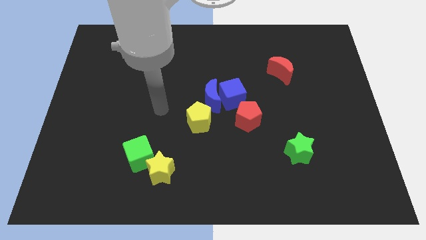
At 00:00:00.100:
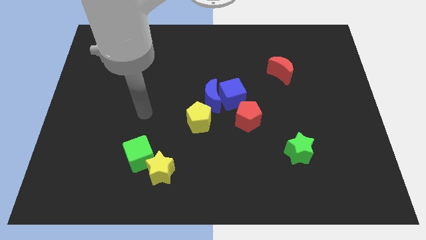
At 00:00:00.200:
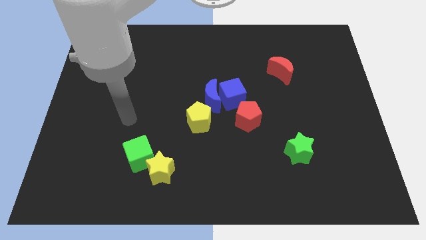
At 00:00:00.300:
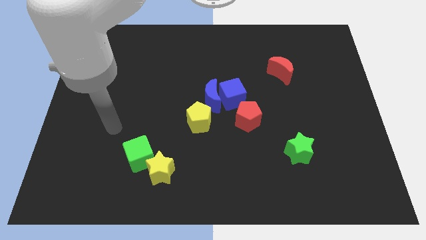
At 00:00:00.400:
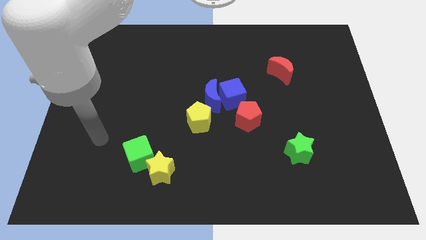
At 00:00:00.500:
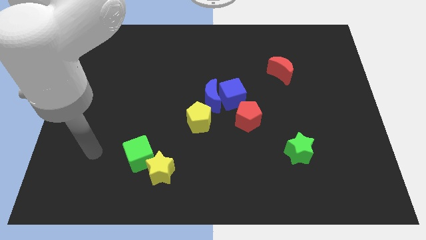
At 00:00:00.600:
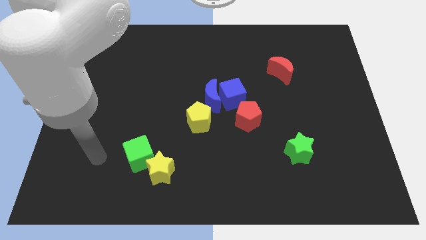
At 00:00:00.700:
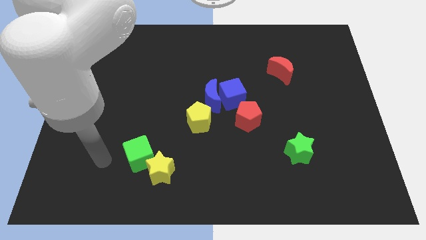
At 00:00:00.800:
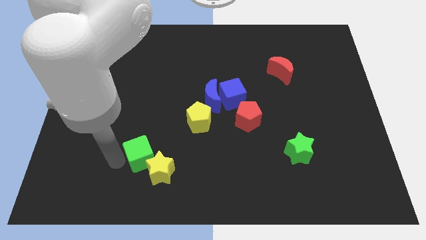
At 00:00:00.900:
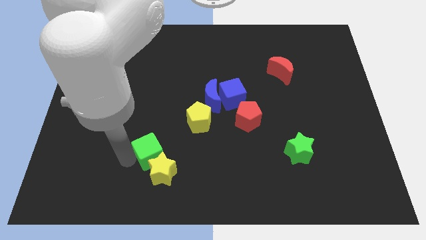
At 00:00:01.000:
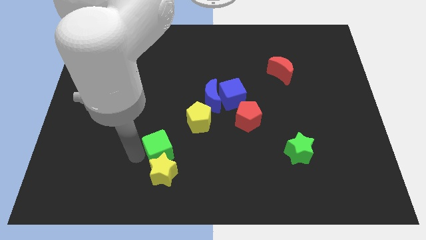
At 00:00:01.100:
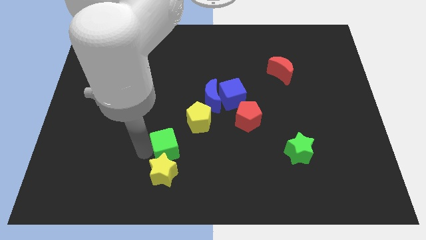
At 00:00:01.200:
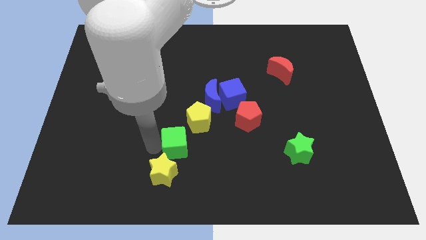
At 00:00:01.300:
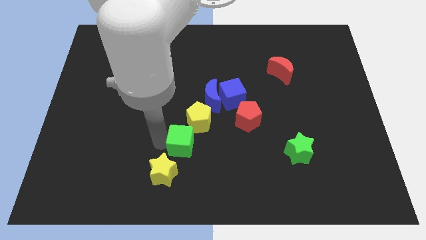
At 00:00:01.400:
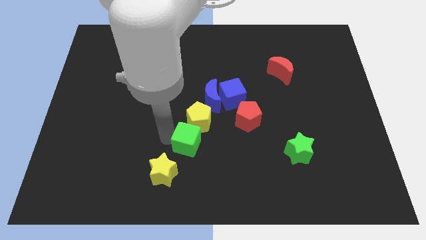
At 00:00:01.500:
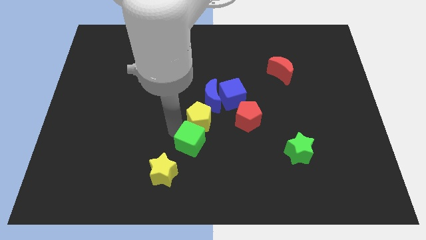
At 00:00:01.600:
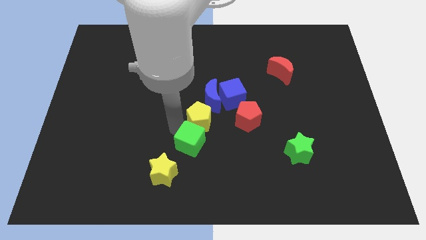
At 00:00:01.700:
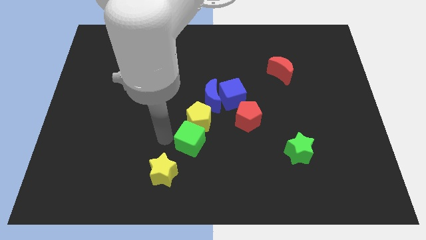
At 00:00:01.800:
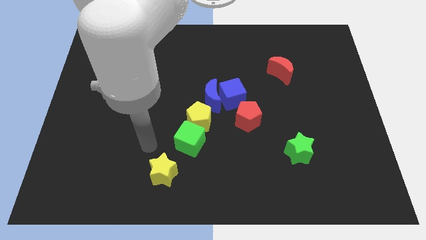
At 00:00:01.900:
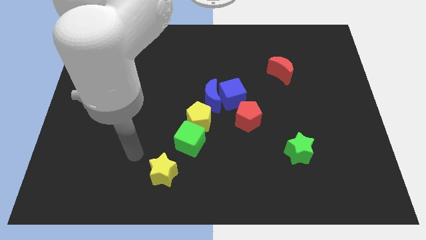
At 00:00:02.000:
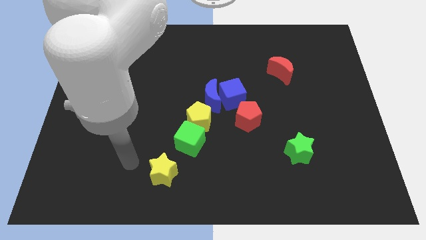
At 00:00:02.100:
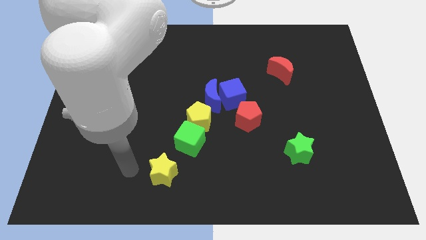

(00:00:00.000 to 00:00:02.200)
separate the green cube and yellow star

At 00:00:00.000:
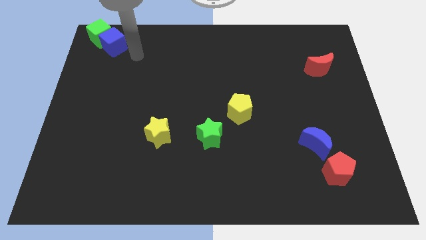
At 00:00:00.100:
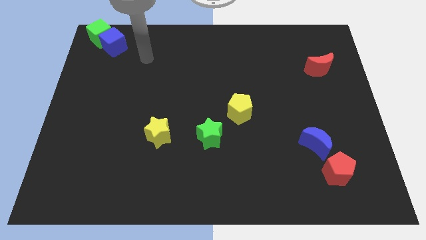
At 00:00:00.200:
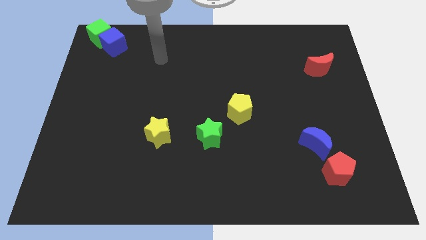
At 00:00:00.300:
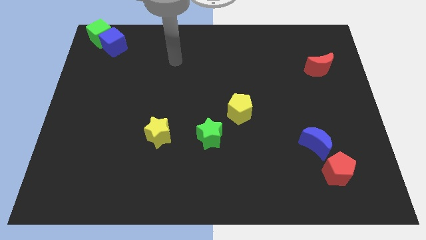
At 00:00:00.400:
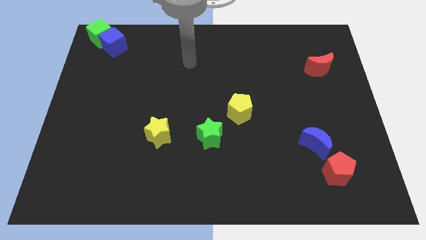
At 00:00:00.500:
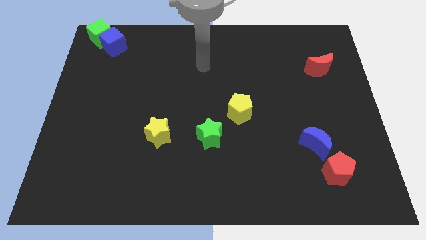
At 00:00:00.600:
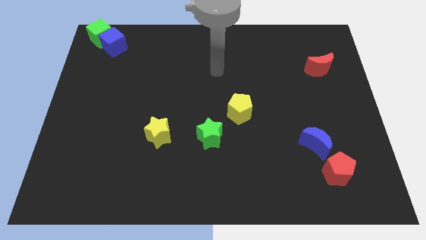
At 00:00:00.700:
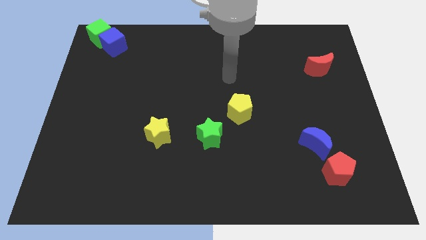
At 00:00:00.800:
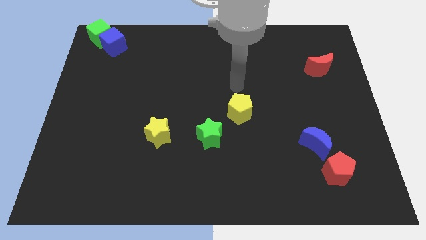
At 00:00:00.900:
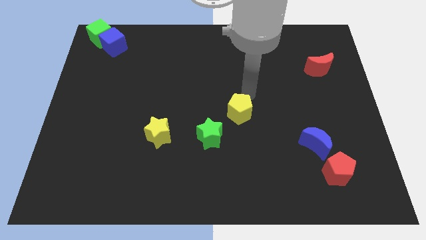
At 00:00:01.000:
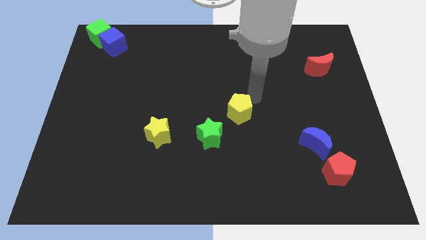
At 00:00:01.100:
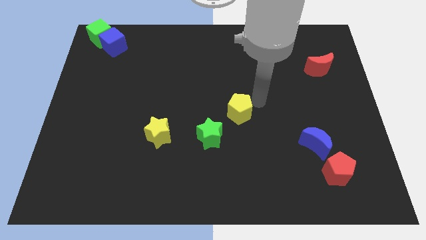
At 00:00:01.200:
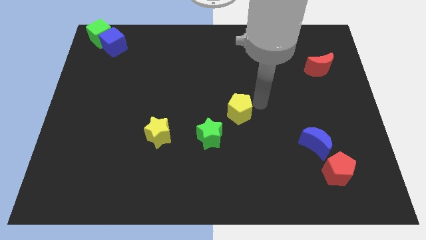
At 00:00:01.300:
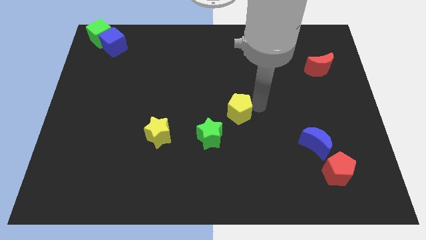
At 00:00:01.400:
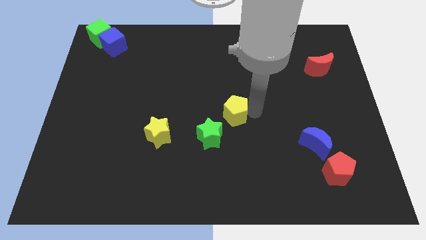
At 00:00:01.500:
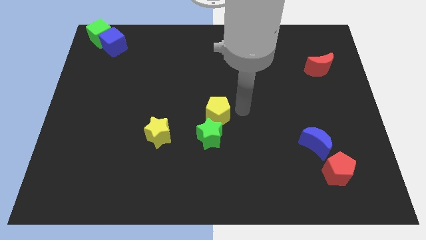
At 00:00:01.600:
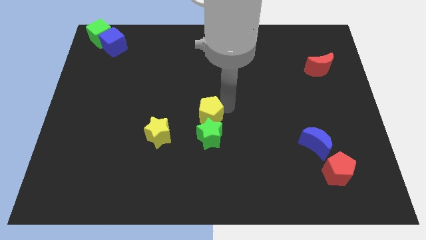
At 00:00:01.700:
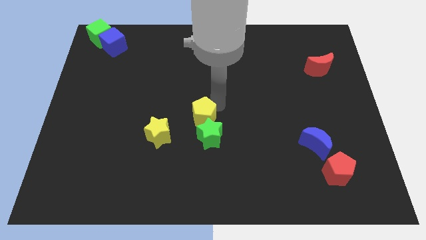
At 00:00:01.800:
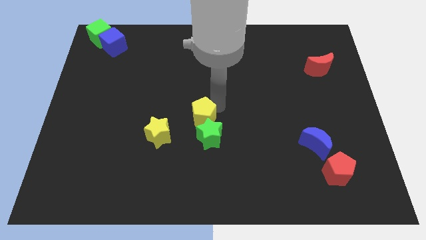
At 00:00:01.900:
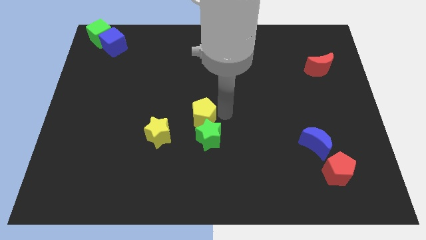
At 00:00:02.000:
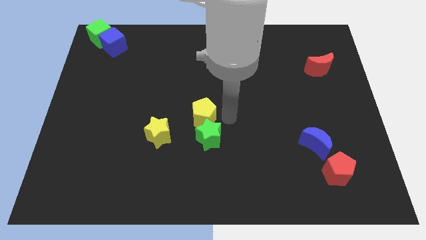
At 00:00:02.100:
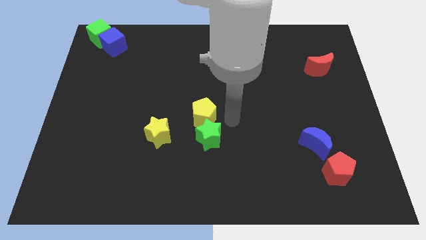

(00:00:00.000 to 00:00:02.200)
push the yellow pentagon above green star

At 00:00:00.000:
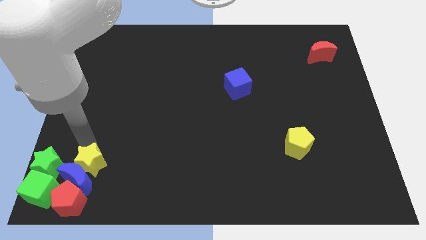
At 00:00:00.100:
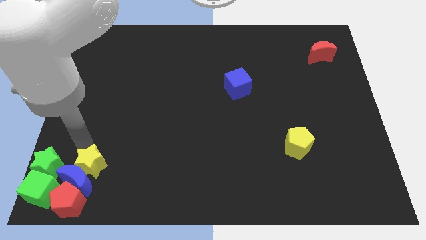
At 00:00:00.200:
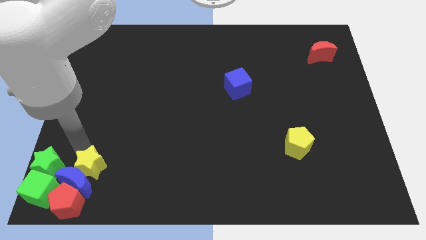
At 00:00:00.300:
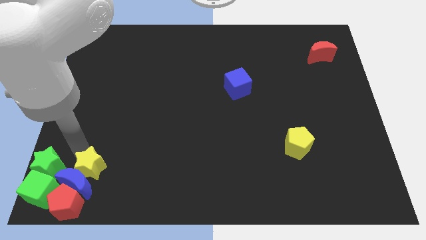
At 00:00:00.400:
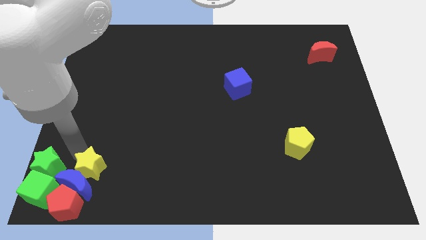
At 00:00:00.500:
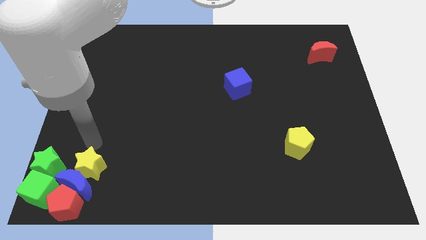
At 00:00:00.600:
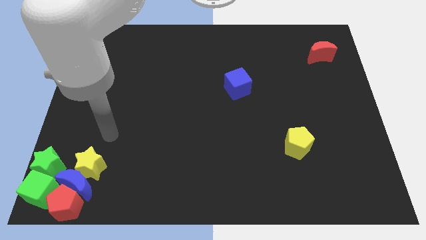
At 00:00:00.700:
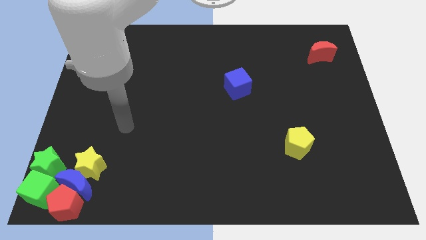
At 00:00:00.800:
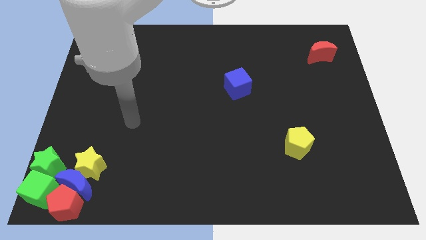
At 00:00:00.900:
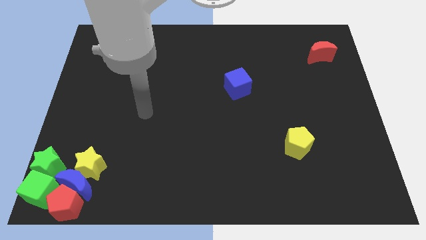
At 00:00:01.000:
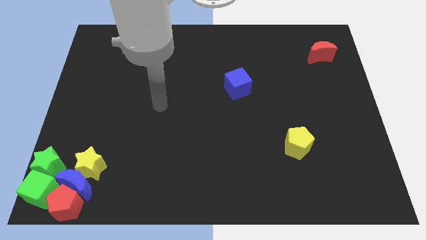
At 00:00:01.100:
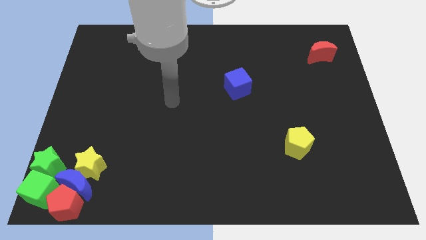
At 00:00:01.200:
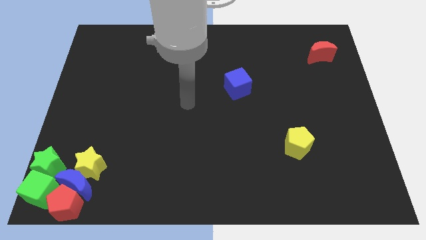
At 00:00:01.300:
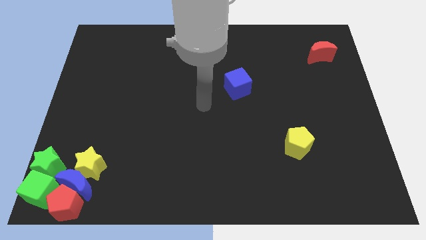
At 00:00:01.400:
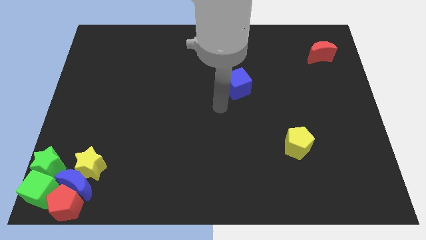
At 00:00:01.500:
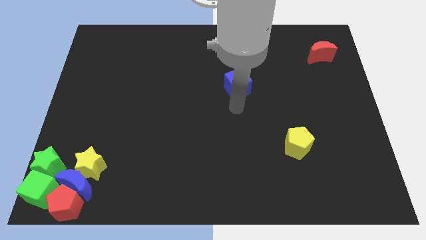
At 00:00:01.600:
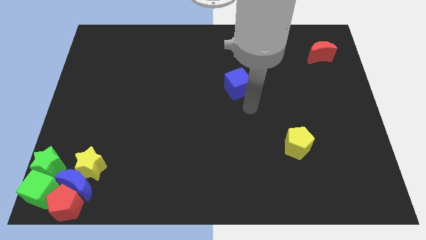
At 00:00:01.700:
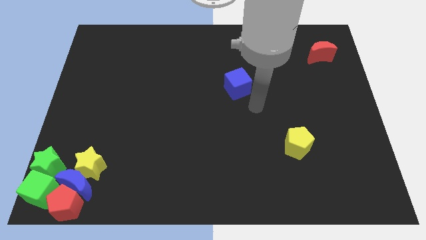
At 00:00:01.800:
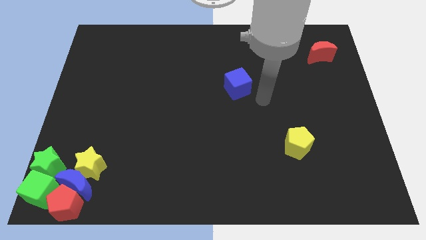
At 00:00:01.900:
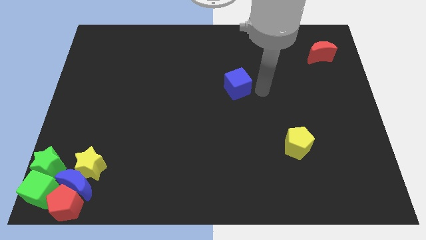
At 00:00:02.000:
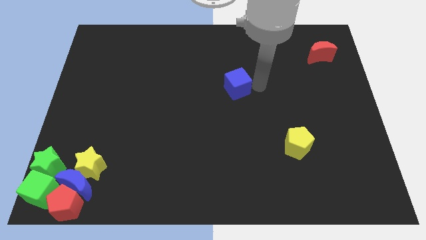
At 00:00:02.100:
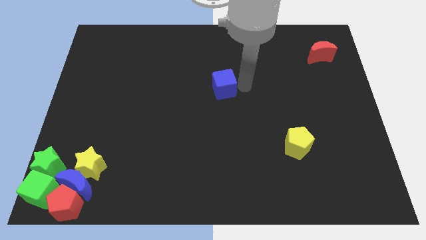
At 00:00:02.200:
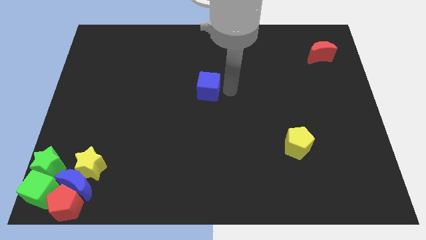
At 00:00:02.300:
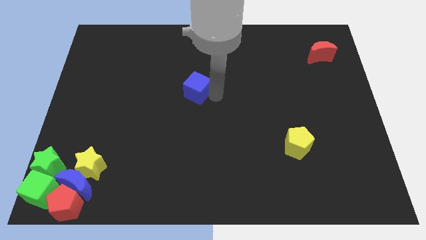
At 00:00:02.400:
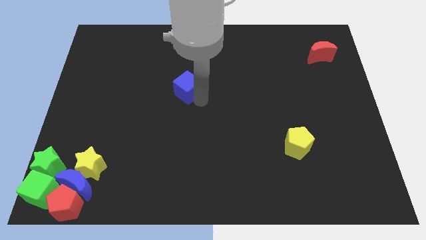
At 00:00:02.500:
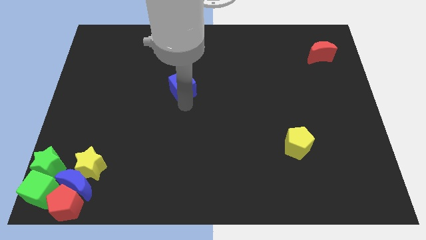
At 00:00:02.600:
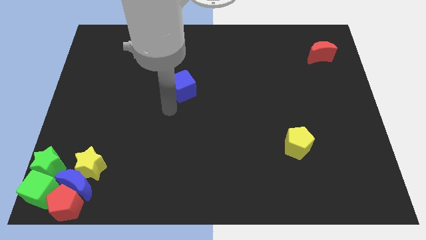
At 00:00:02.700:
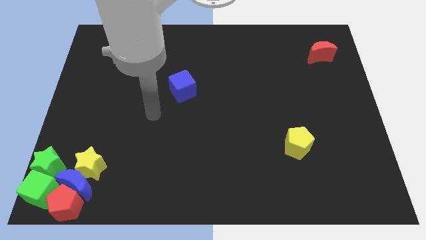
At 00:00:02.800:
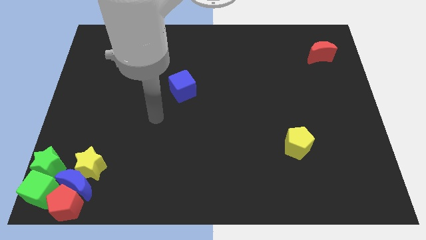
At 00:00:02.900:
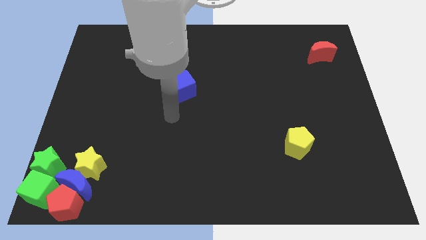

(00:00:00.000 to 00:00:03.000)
push the blue cube towards the left side

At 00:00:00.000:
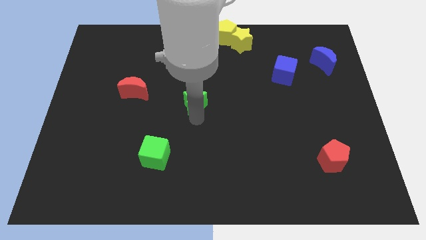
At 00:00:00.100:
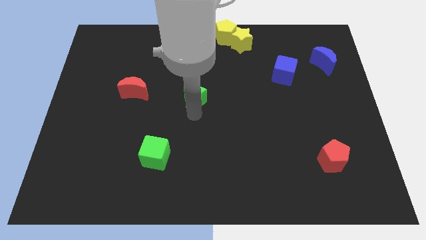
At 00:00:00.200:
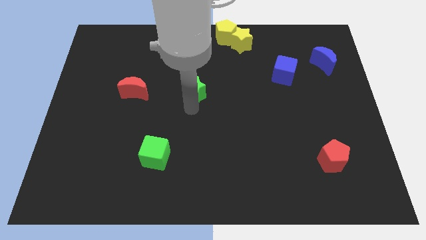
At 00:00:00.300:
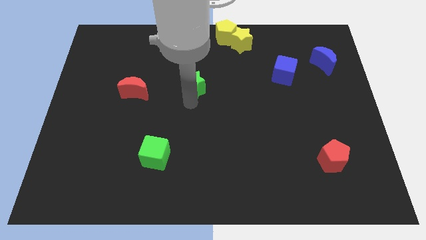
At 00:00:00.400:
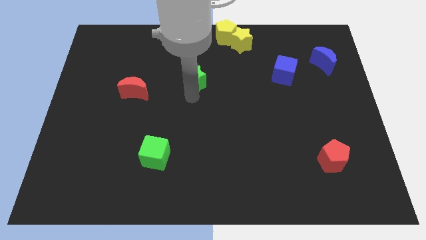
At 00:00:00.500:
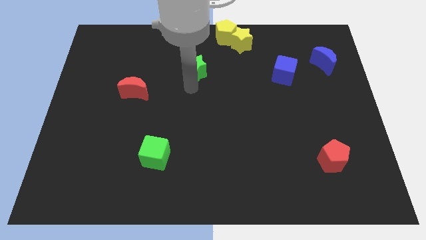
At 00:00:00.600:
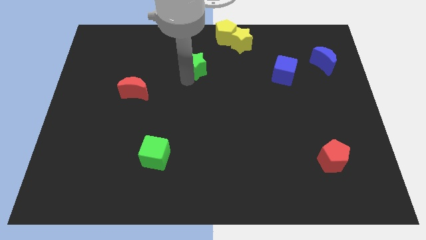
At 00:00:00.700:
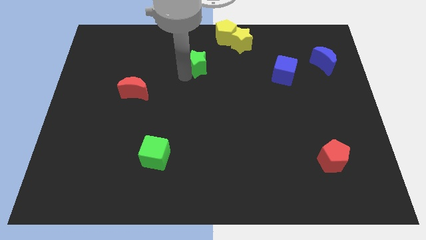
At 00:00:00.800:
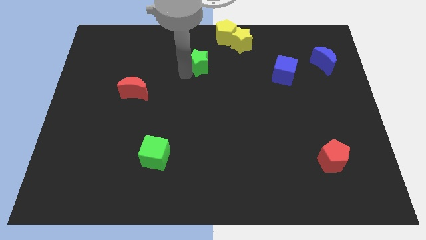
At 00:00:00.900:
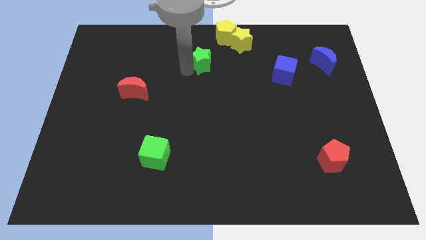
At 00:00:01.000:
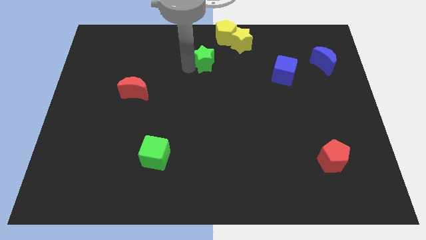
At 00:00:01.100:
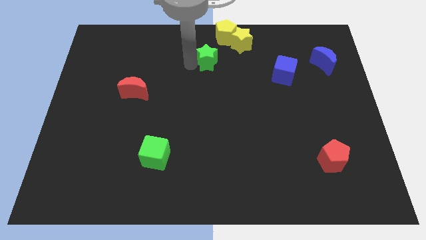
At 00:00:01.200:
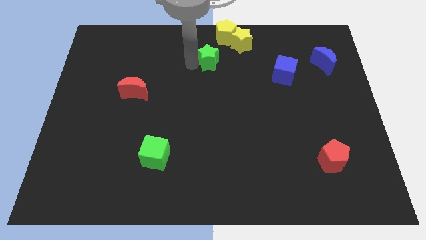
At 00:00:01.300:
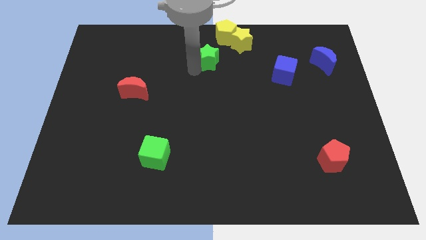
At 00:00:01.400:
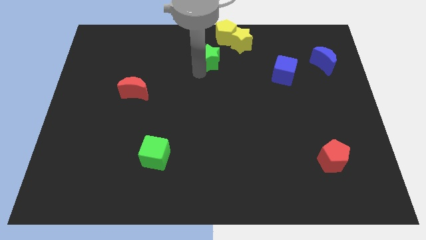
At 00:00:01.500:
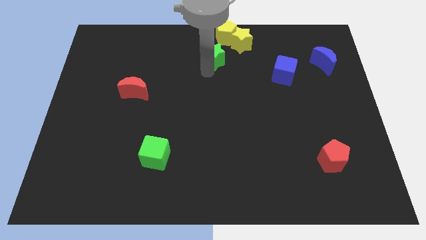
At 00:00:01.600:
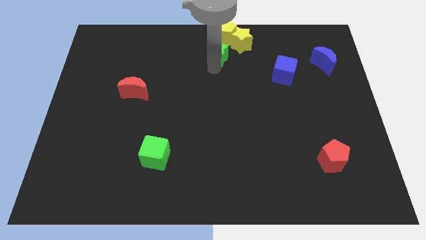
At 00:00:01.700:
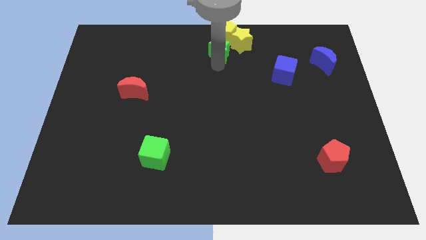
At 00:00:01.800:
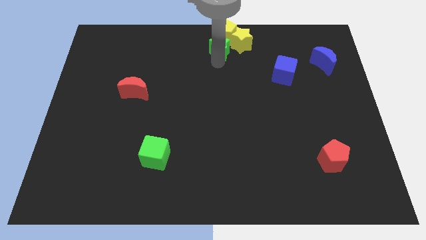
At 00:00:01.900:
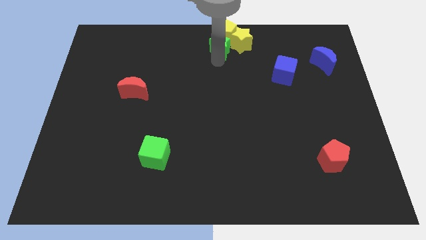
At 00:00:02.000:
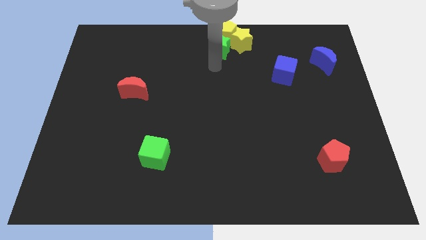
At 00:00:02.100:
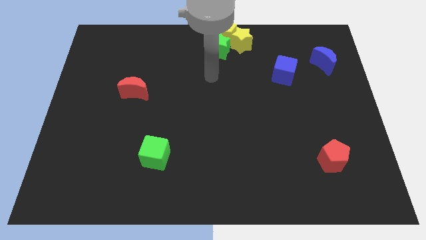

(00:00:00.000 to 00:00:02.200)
move green star to the bottom of the yellow pentagon
